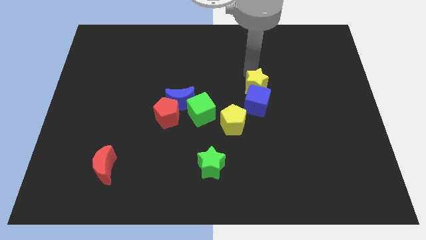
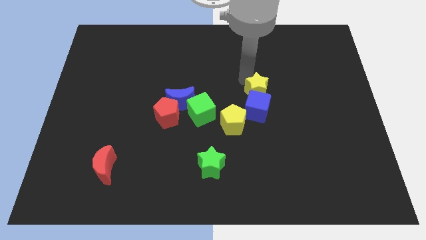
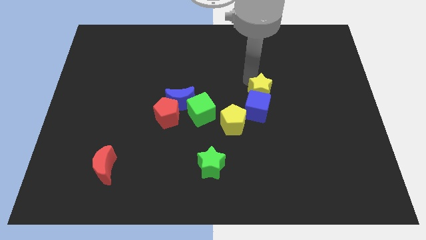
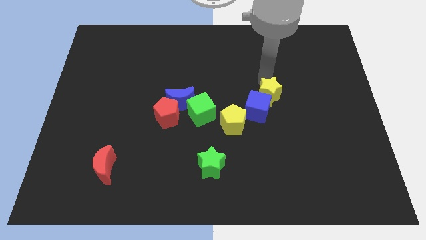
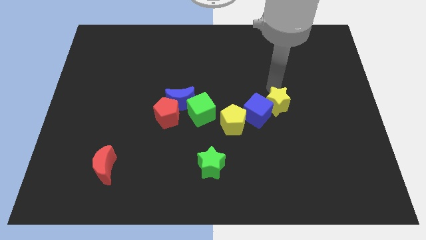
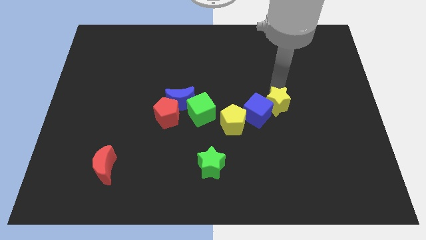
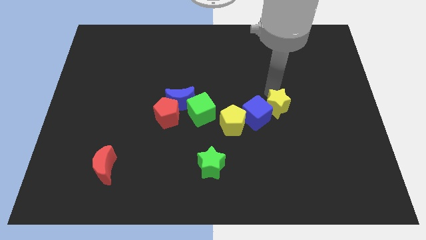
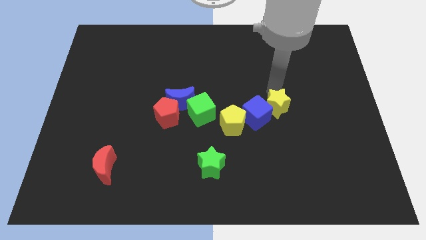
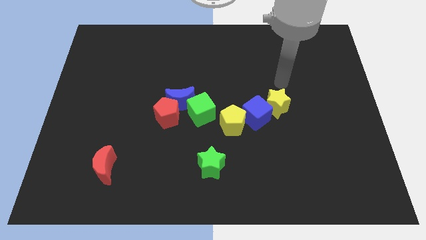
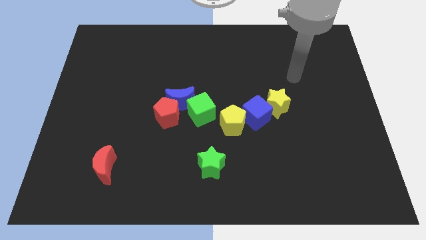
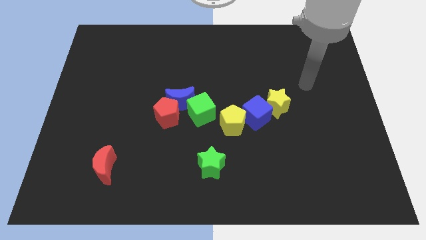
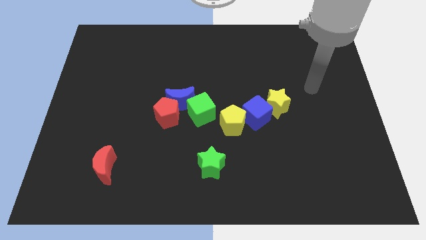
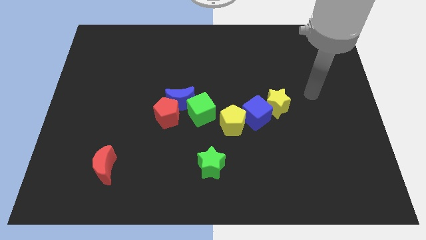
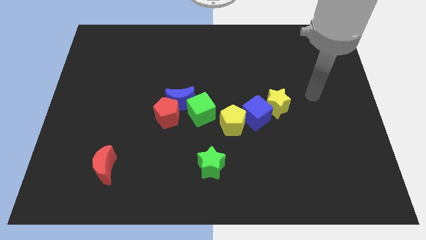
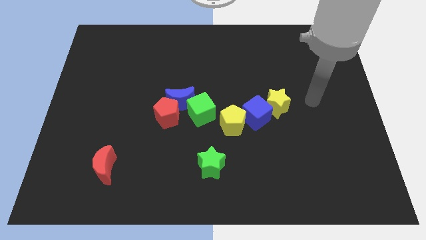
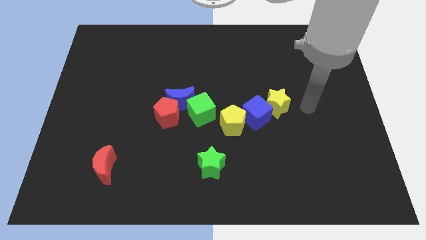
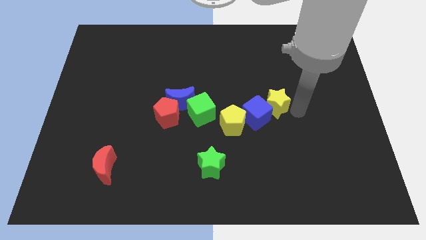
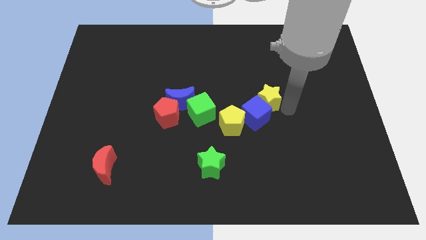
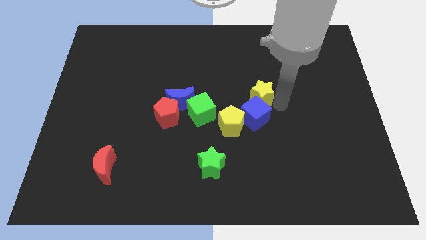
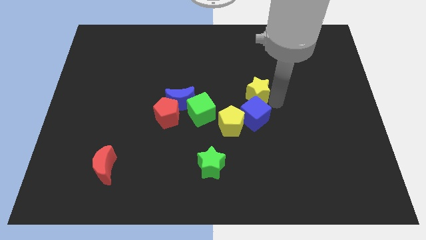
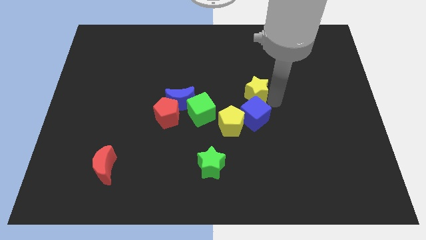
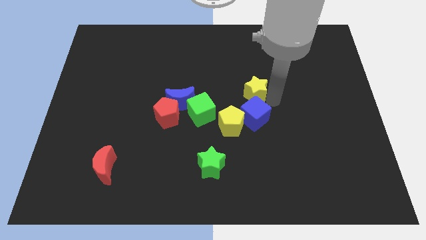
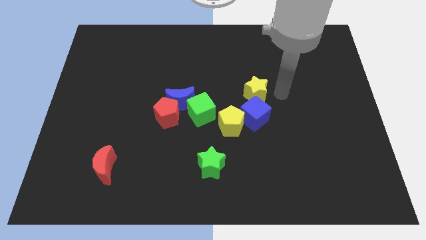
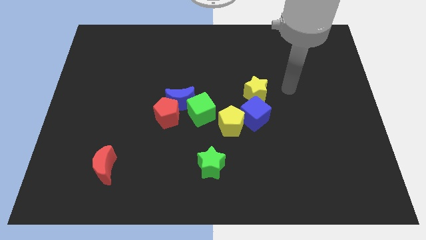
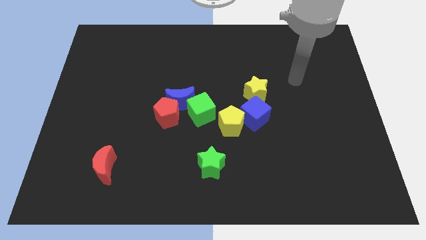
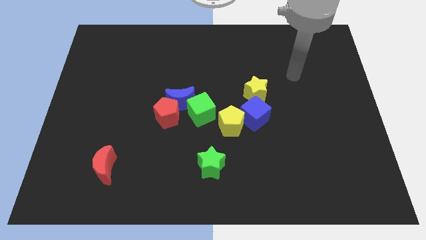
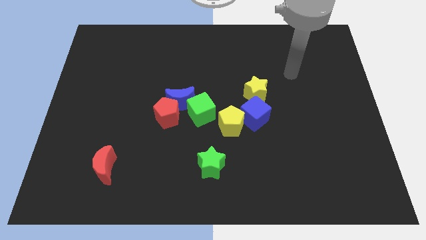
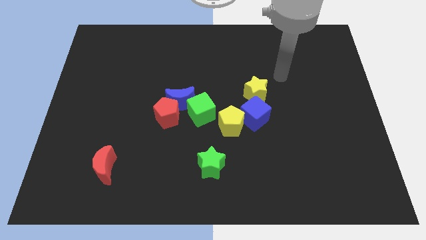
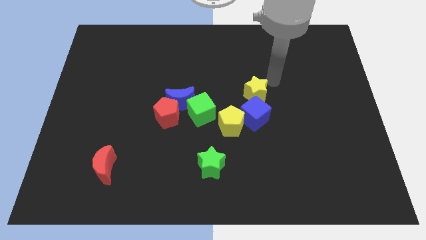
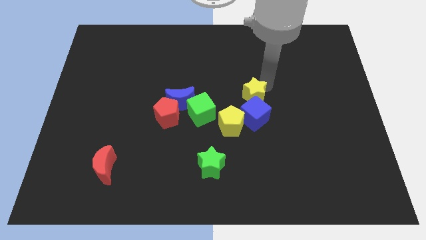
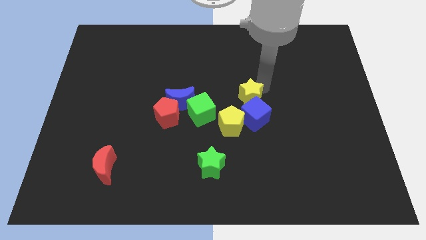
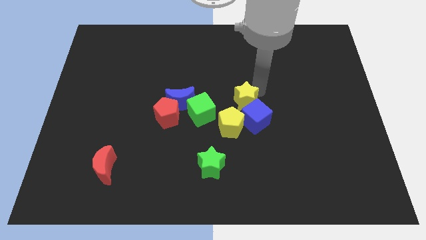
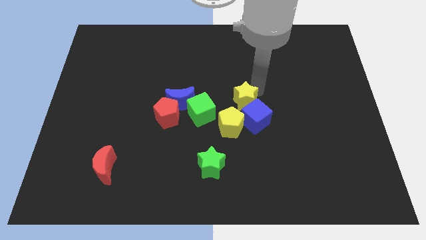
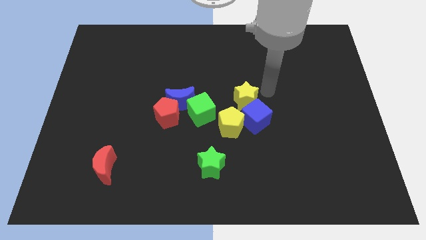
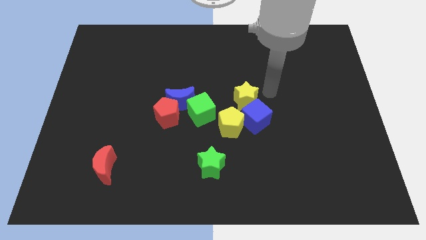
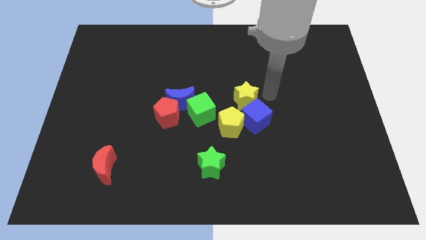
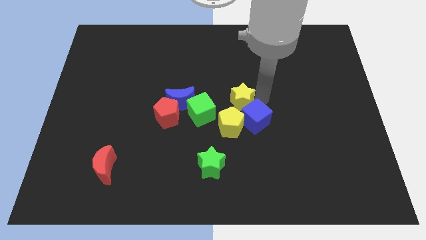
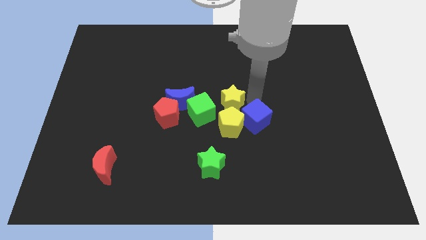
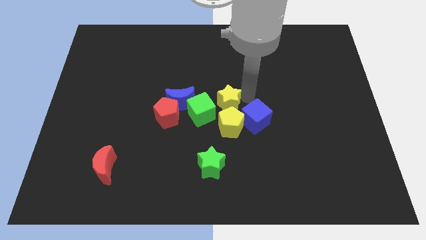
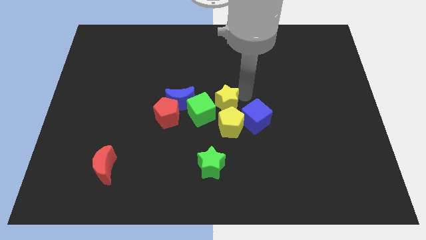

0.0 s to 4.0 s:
place the yellow star above the yellow pentagon

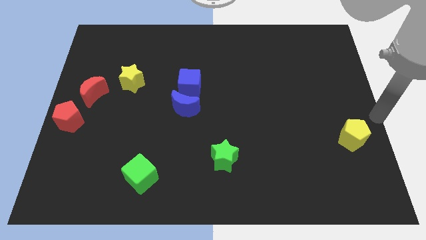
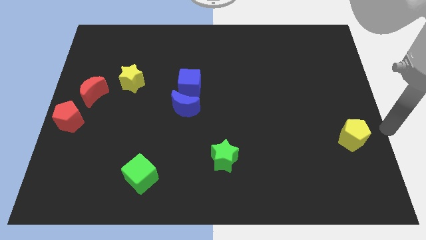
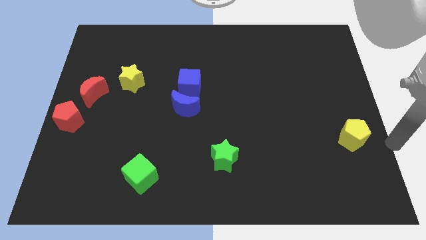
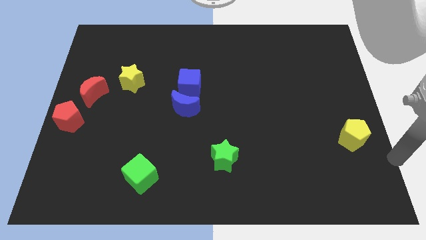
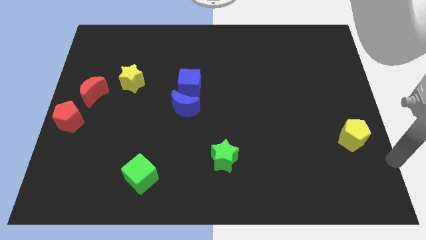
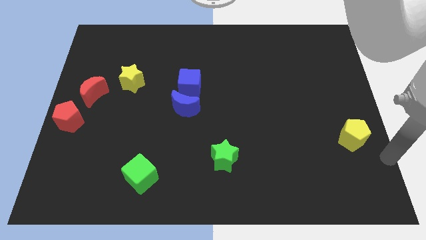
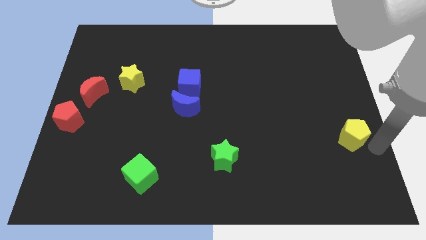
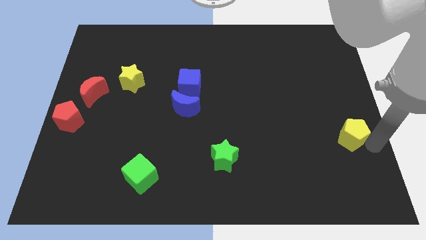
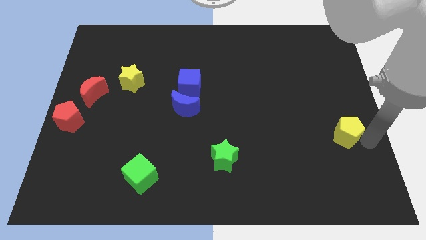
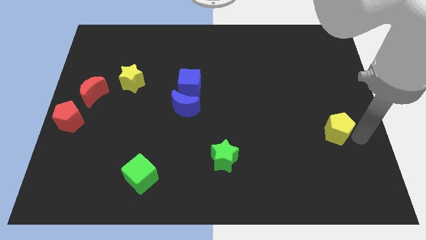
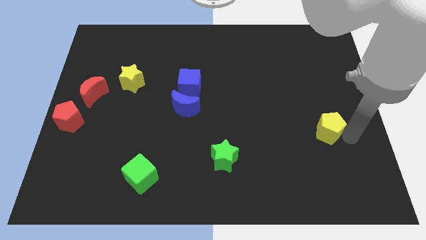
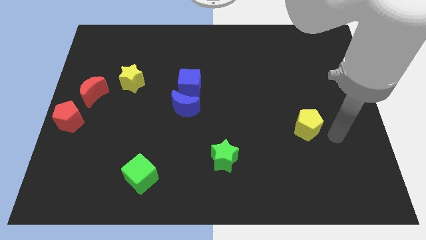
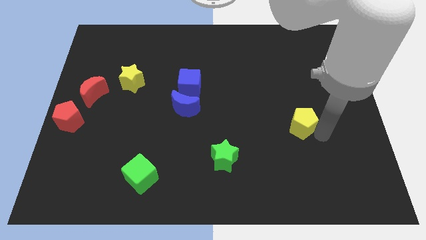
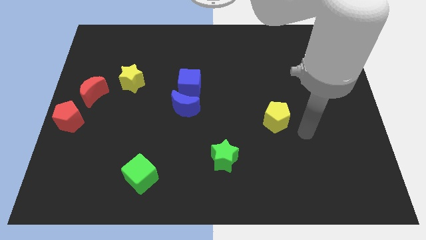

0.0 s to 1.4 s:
place the yellow pentagon diagnally top right to green star

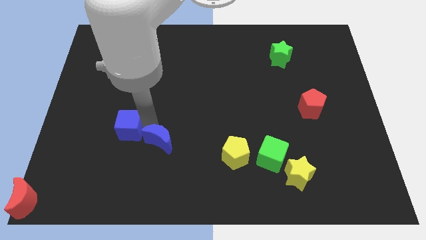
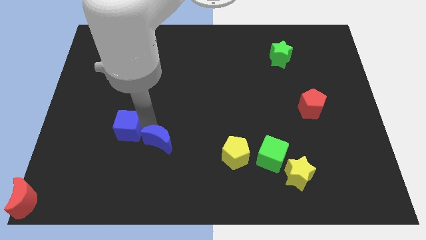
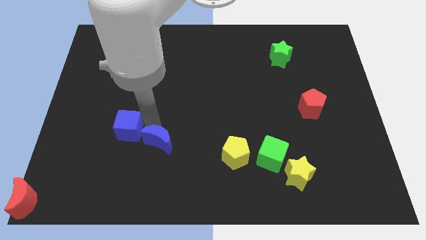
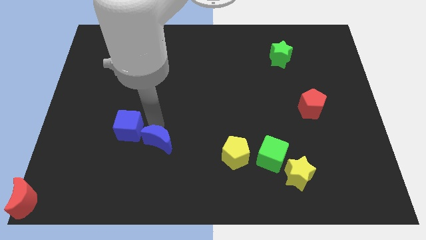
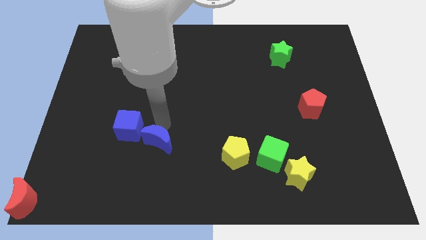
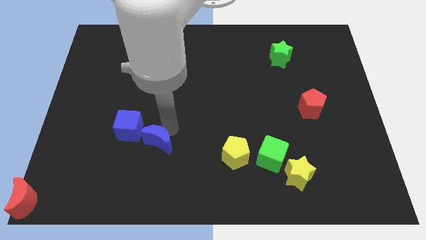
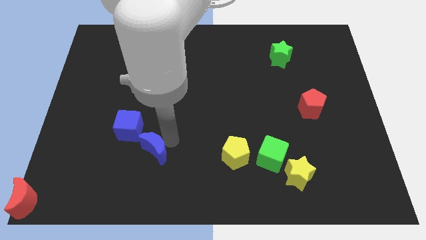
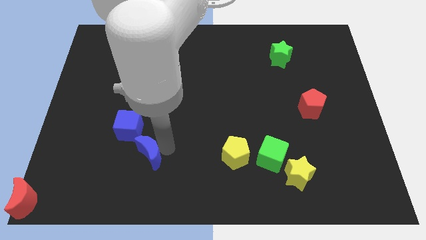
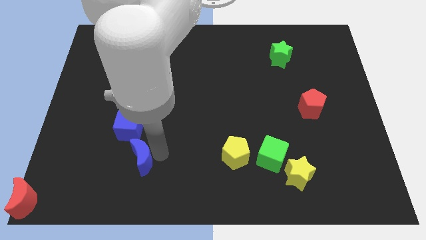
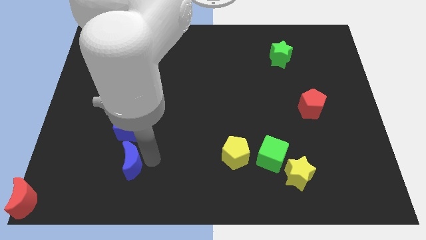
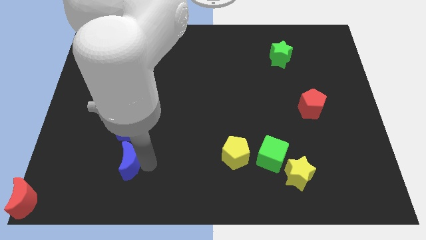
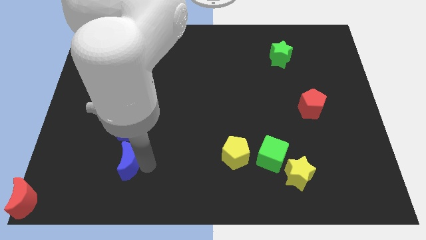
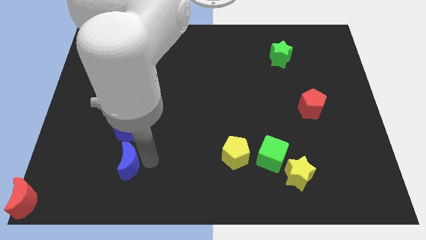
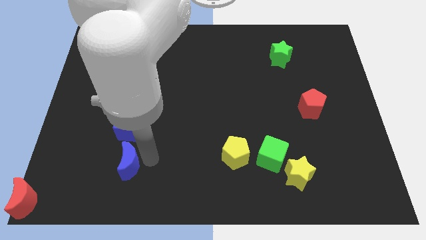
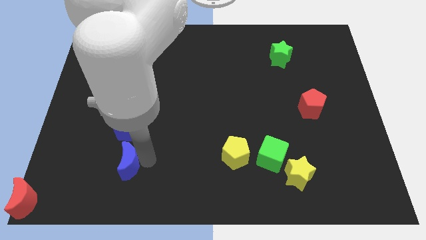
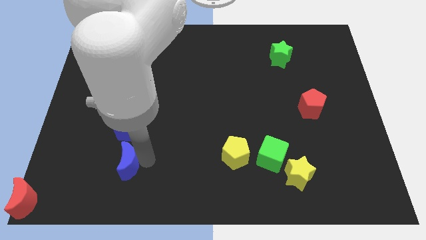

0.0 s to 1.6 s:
place the blue moon below the blue cube

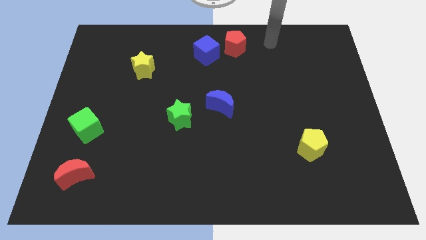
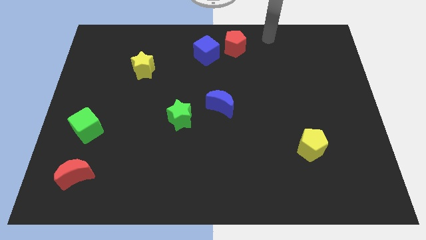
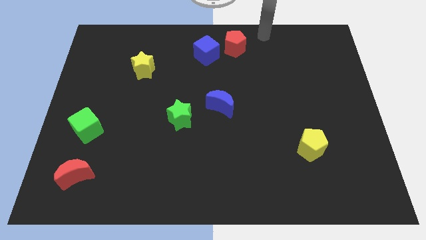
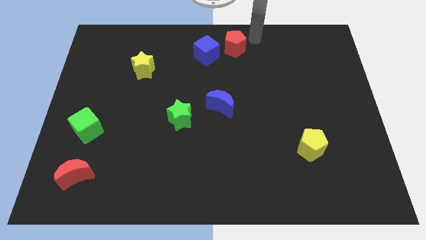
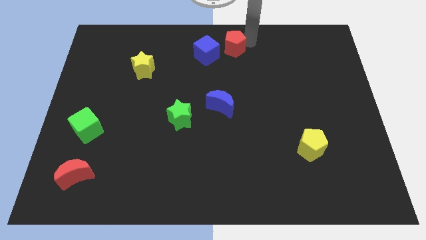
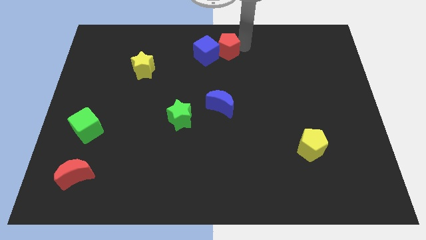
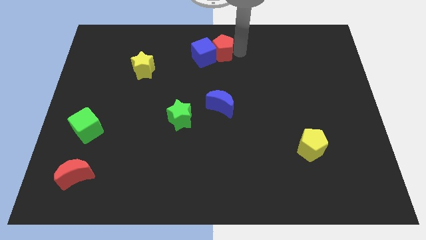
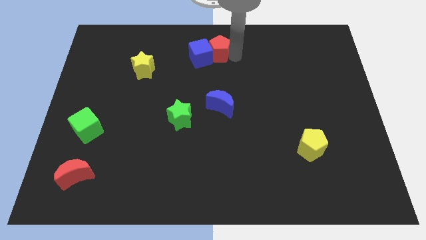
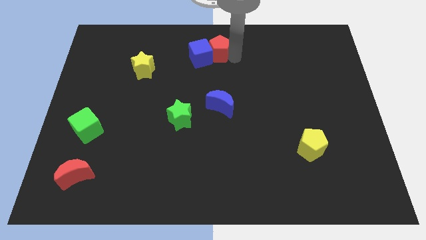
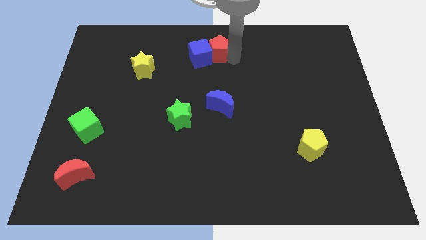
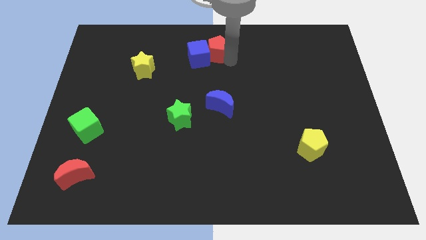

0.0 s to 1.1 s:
move the red pentagon to the right of the blue cube

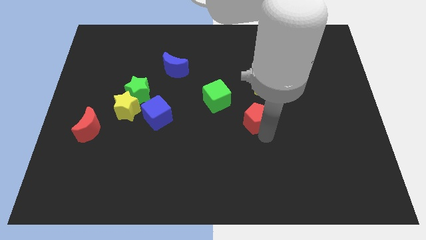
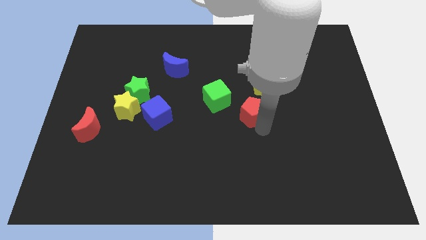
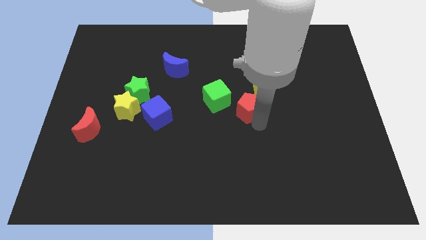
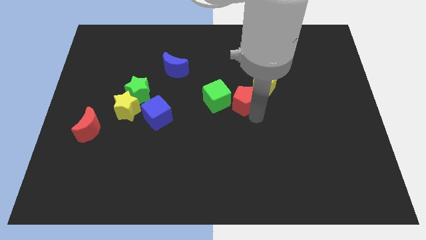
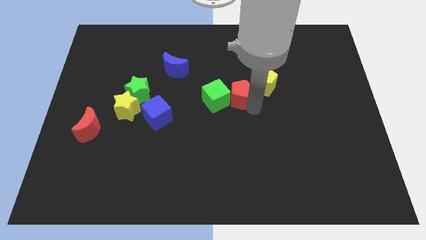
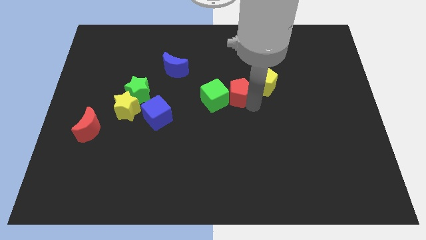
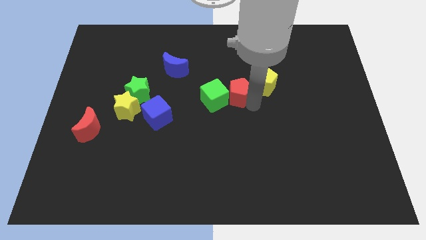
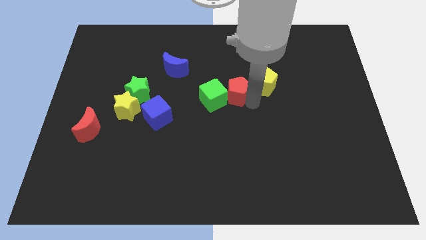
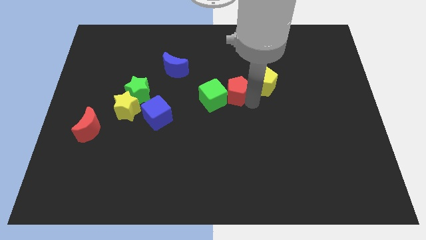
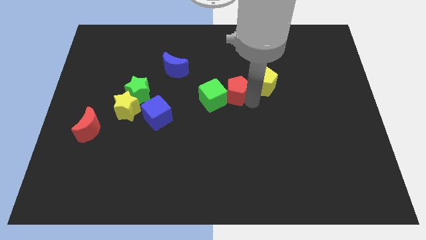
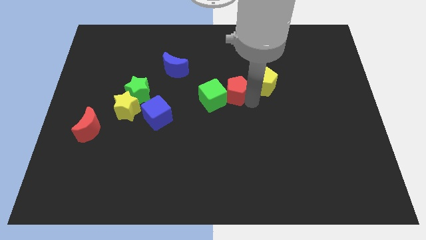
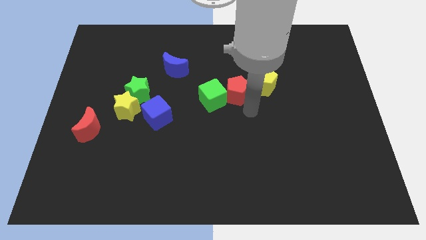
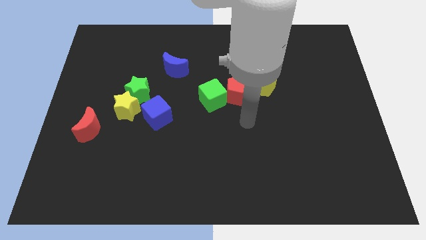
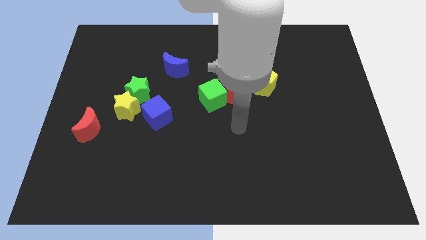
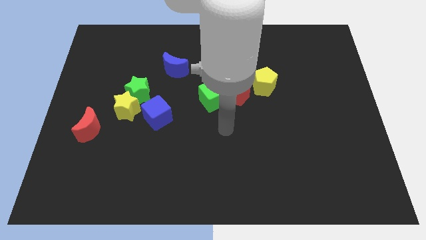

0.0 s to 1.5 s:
place red pentagon beside the green cube
